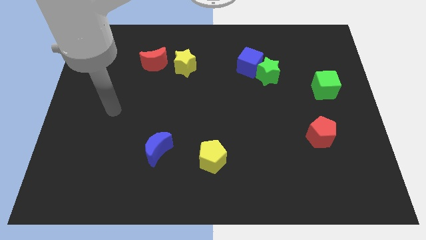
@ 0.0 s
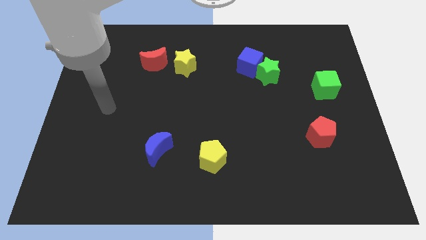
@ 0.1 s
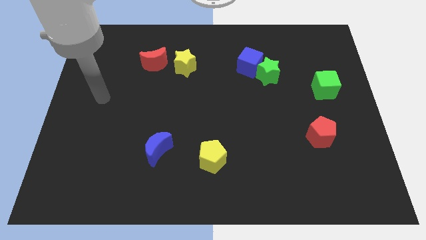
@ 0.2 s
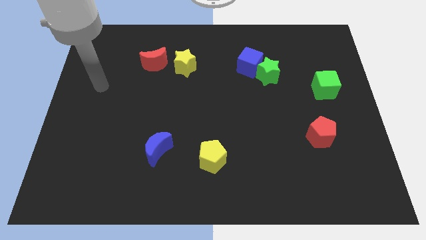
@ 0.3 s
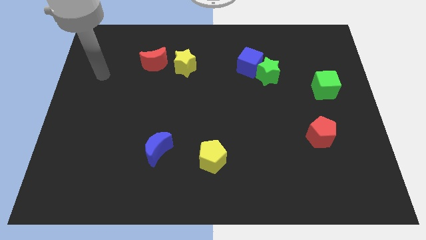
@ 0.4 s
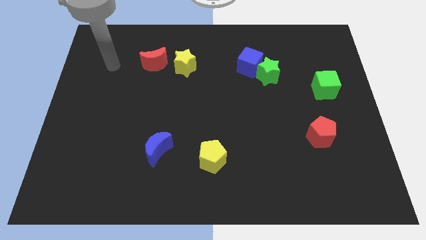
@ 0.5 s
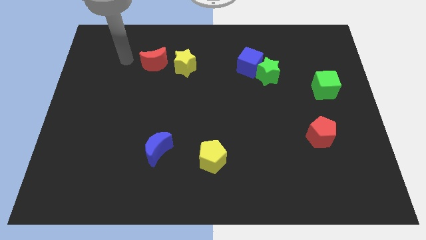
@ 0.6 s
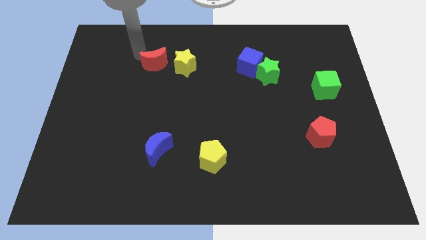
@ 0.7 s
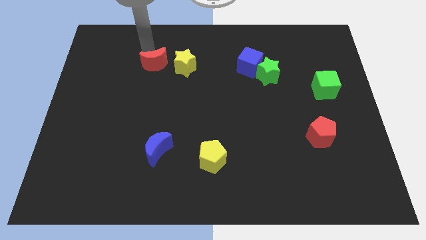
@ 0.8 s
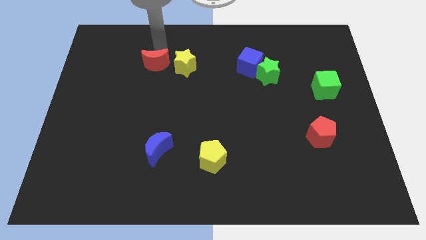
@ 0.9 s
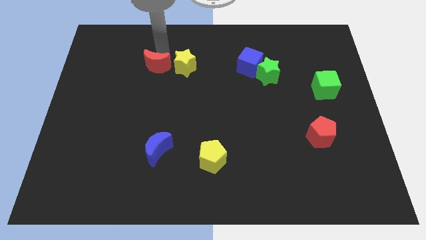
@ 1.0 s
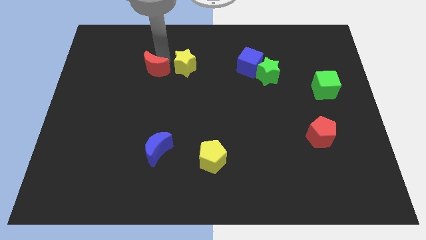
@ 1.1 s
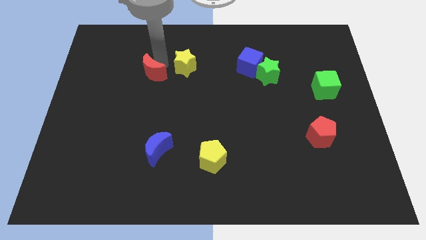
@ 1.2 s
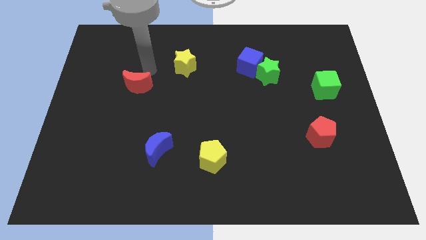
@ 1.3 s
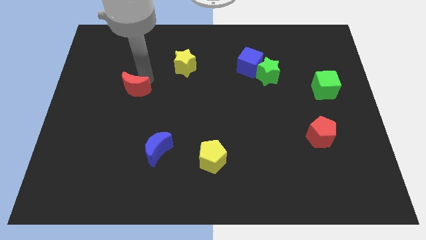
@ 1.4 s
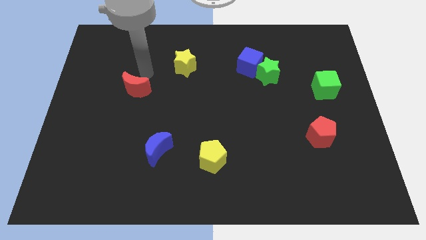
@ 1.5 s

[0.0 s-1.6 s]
place the red moon to the center

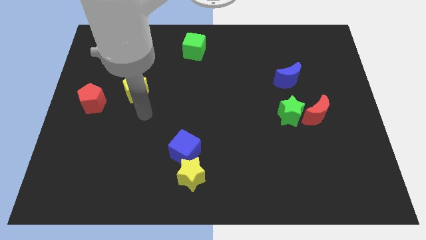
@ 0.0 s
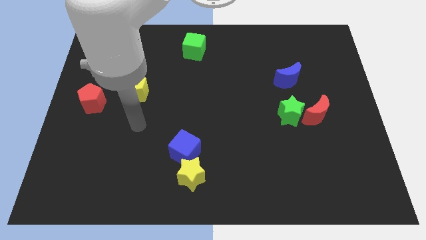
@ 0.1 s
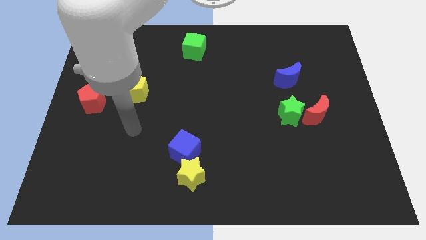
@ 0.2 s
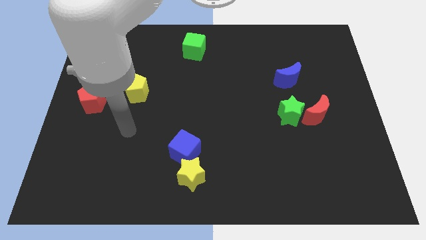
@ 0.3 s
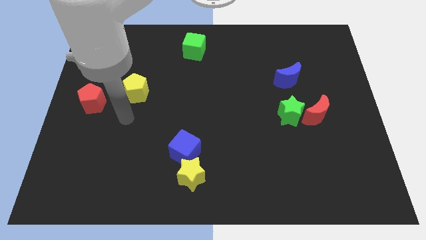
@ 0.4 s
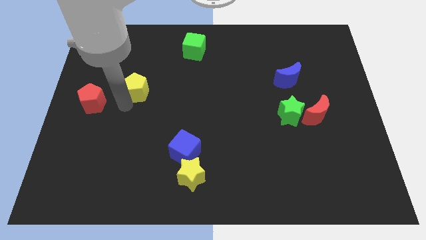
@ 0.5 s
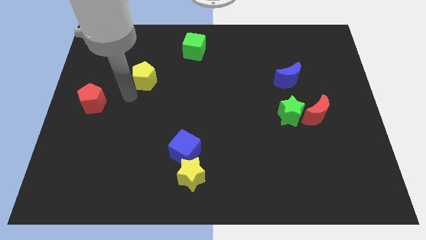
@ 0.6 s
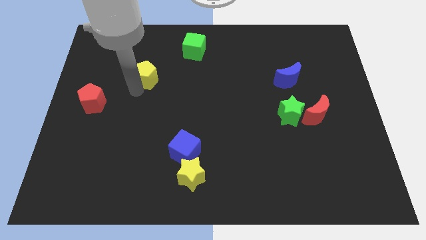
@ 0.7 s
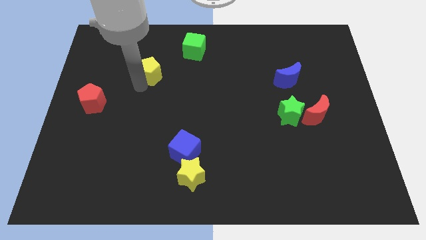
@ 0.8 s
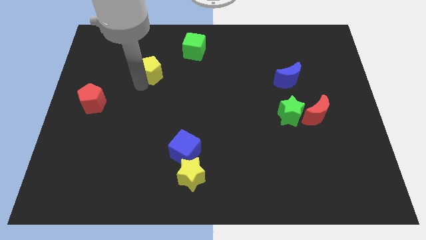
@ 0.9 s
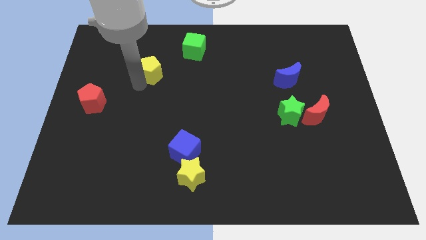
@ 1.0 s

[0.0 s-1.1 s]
place the yellow pentagon in between the red pentagon and green cube

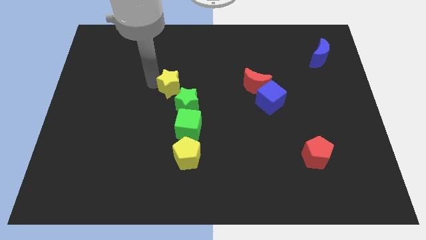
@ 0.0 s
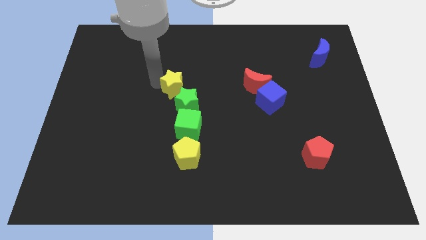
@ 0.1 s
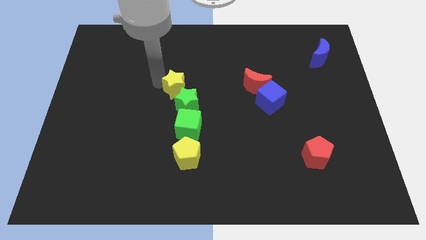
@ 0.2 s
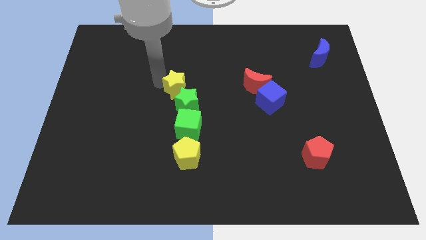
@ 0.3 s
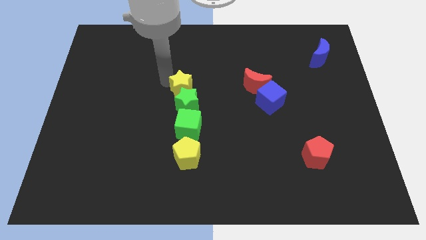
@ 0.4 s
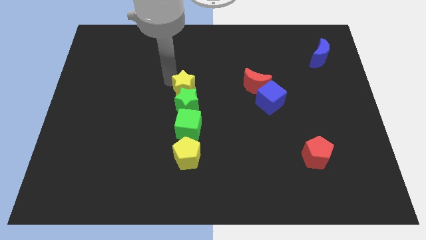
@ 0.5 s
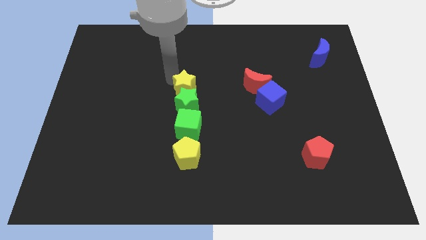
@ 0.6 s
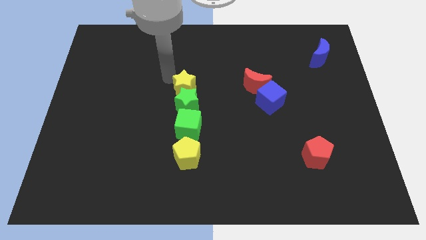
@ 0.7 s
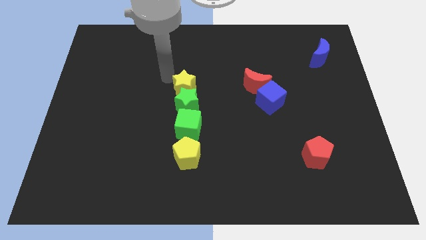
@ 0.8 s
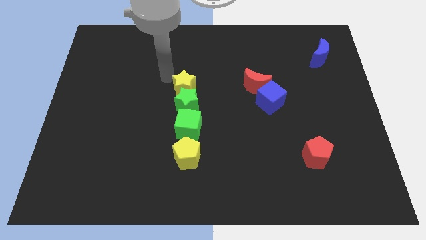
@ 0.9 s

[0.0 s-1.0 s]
move yellow star above green star

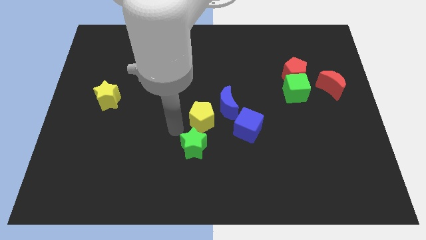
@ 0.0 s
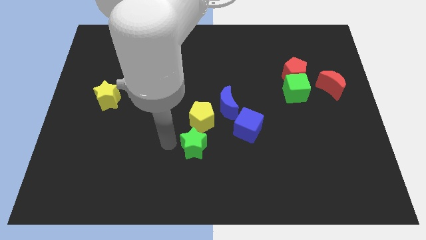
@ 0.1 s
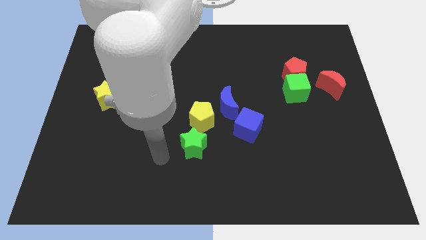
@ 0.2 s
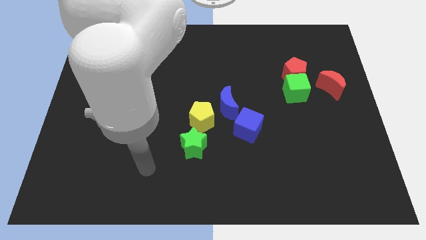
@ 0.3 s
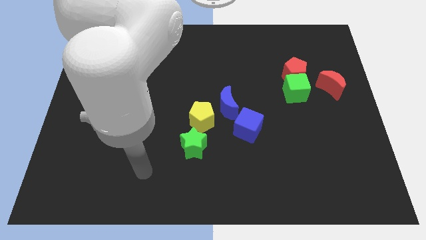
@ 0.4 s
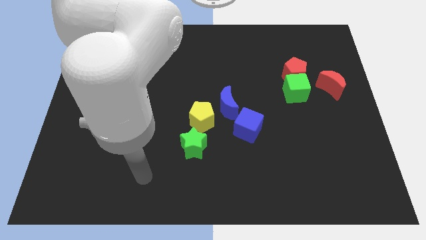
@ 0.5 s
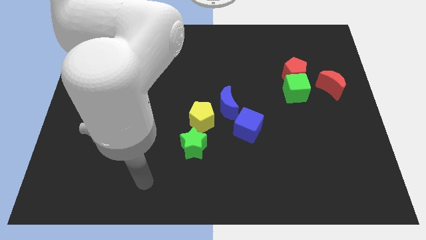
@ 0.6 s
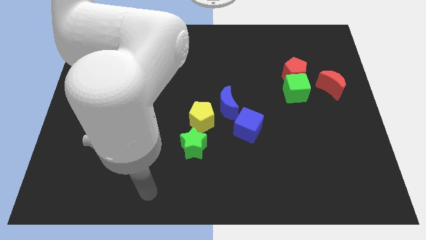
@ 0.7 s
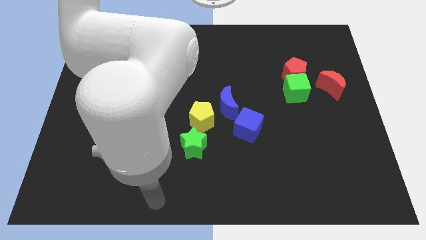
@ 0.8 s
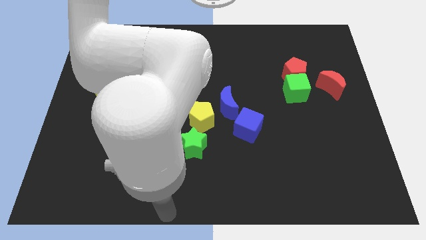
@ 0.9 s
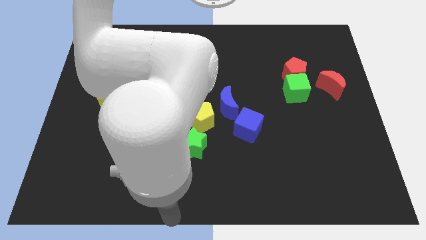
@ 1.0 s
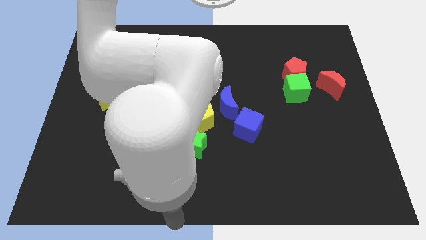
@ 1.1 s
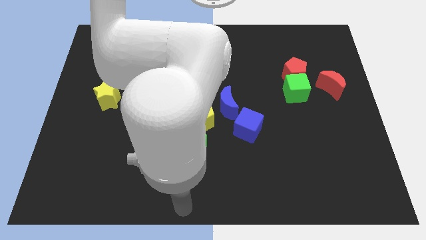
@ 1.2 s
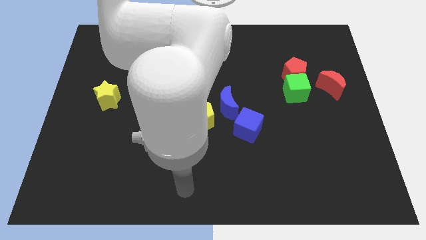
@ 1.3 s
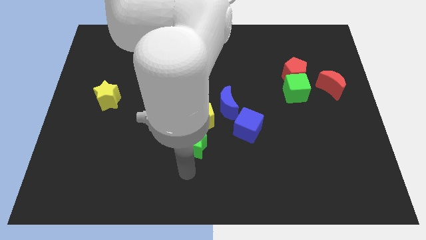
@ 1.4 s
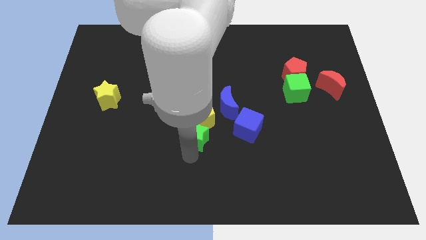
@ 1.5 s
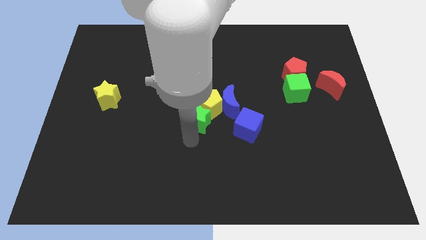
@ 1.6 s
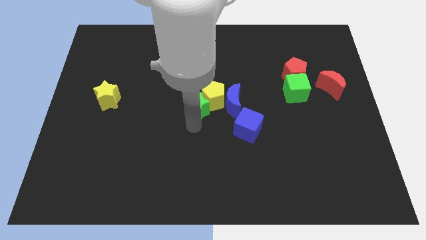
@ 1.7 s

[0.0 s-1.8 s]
push the green star into the yellow pentagon

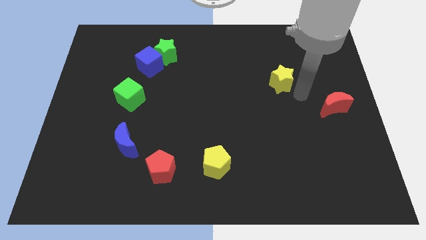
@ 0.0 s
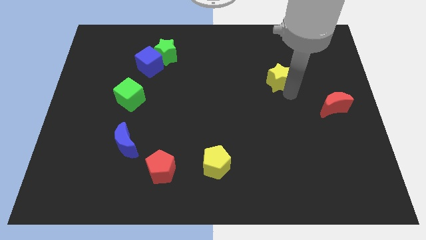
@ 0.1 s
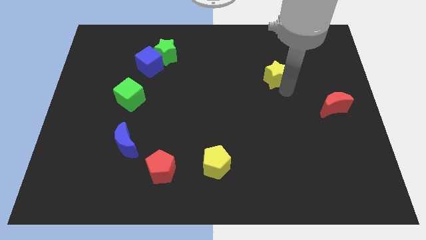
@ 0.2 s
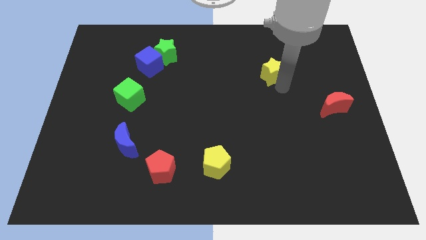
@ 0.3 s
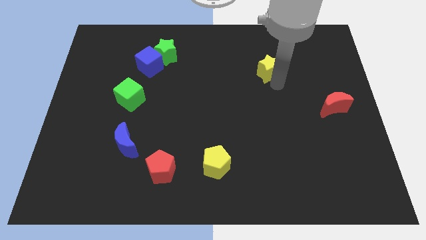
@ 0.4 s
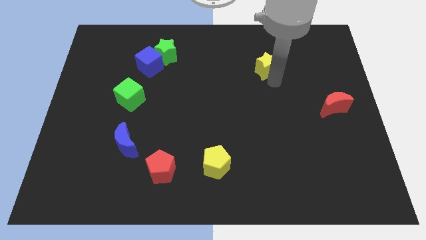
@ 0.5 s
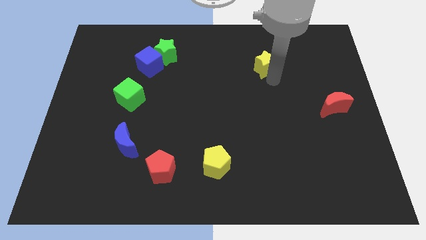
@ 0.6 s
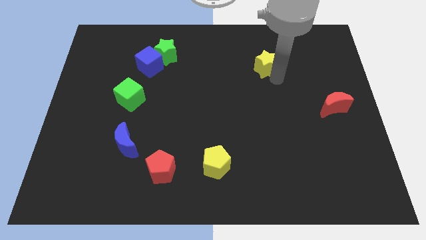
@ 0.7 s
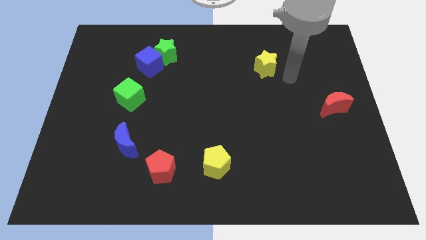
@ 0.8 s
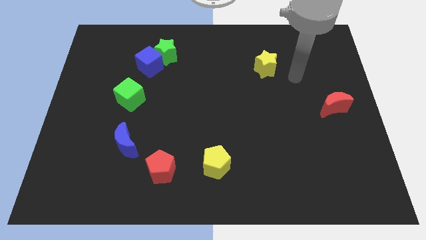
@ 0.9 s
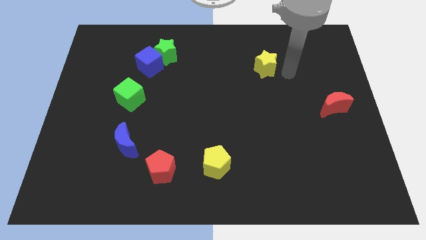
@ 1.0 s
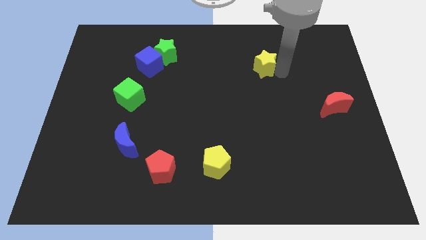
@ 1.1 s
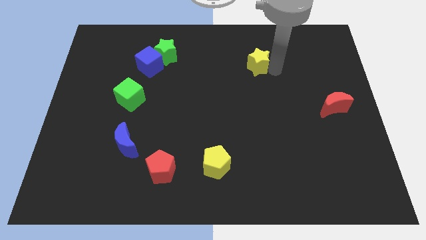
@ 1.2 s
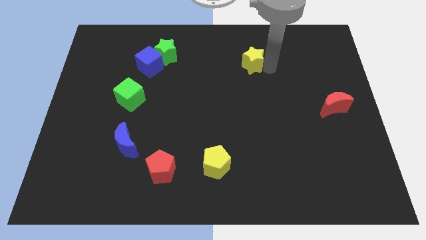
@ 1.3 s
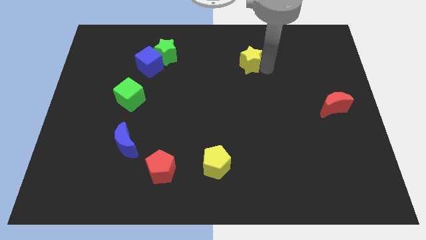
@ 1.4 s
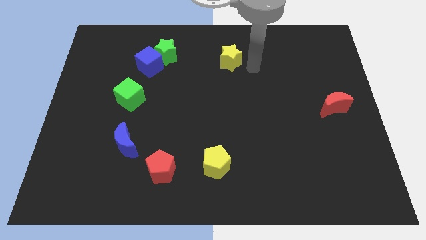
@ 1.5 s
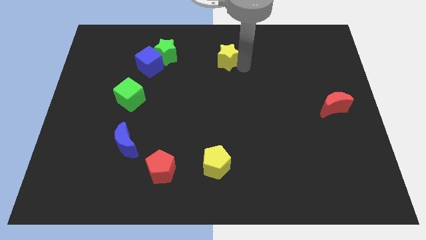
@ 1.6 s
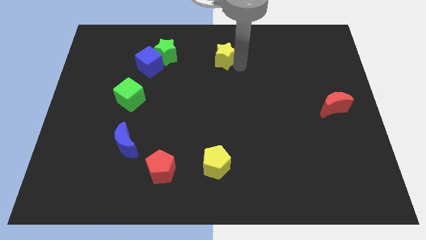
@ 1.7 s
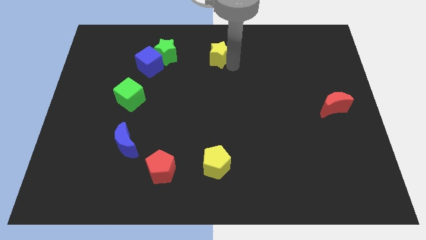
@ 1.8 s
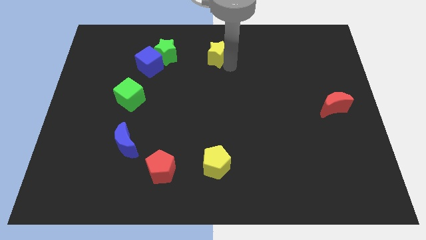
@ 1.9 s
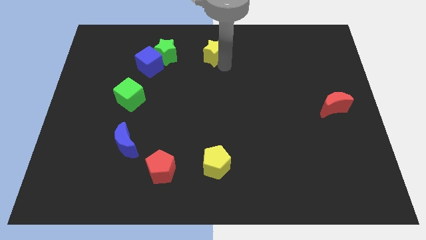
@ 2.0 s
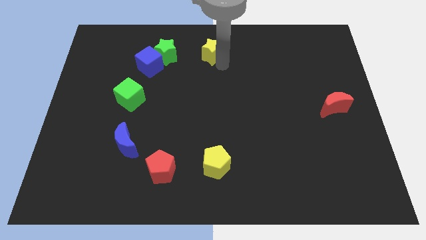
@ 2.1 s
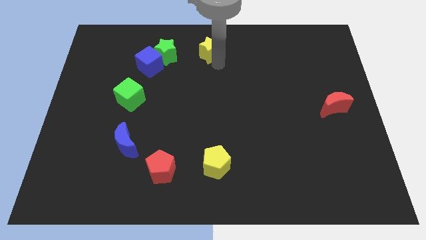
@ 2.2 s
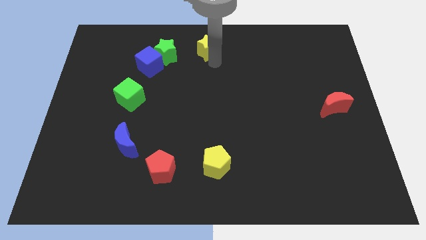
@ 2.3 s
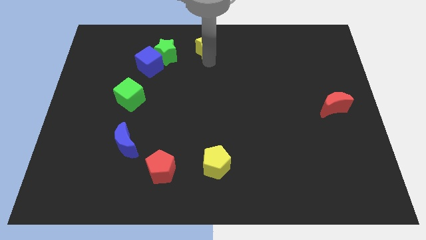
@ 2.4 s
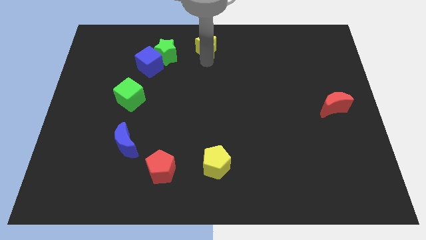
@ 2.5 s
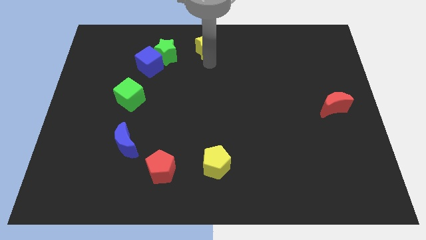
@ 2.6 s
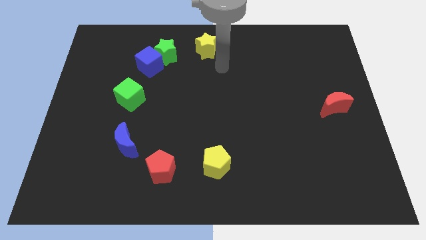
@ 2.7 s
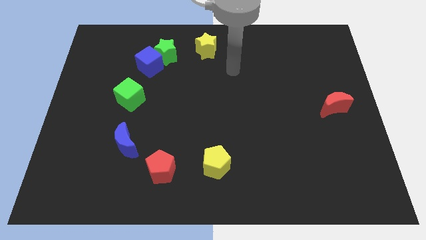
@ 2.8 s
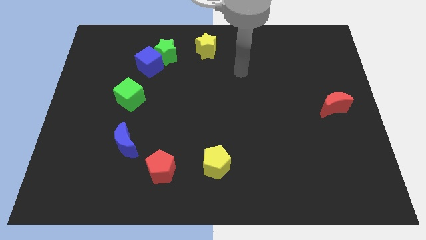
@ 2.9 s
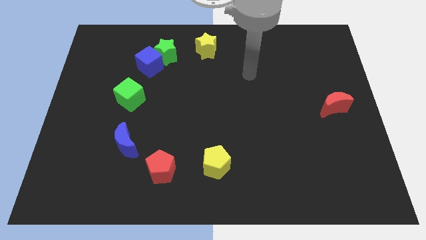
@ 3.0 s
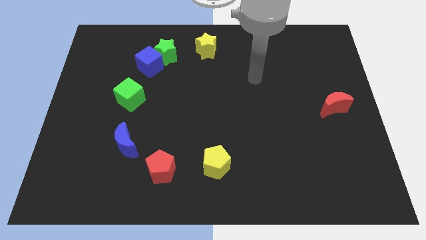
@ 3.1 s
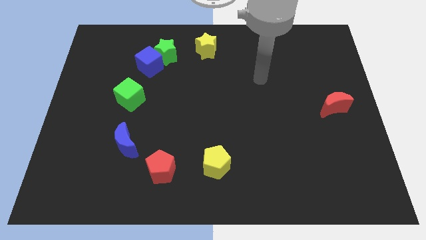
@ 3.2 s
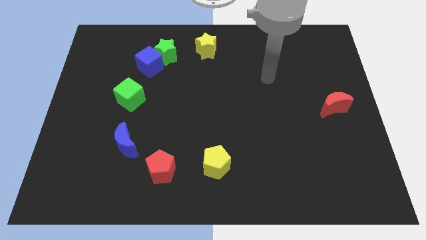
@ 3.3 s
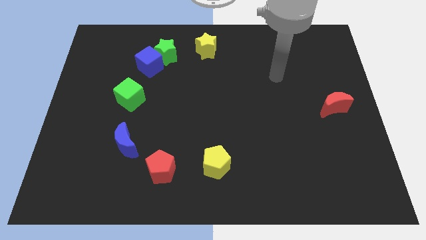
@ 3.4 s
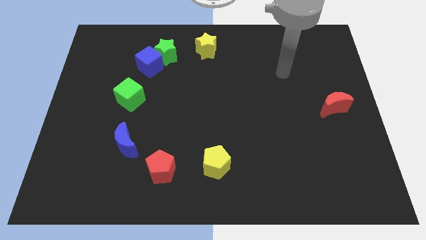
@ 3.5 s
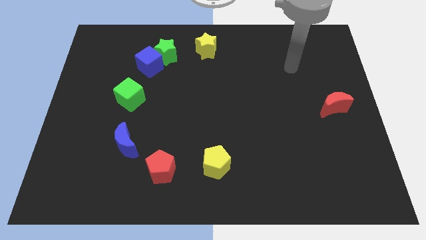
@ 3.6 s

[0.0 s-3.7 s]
place the yellow star to the right of the green star
